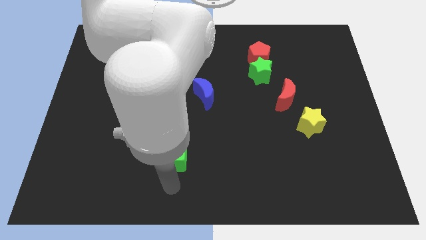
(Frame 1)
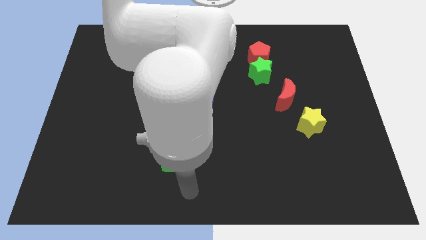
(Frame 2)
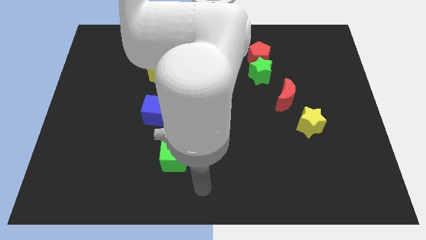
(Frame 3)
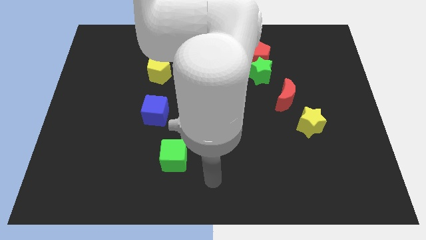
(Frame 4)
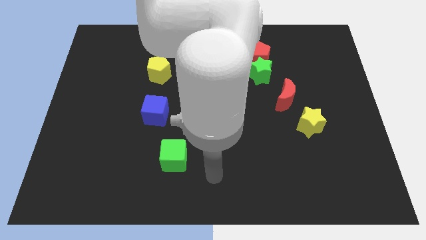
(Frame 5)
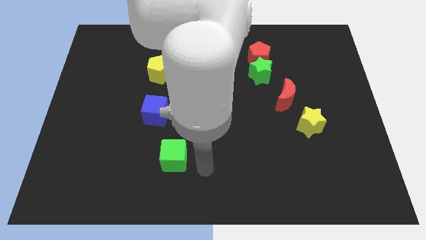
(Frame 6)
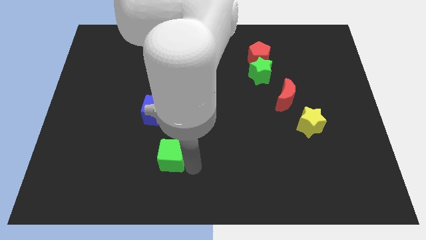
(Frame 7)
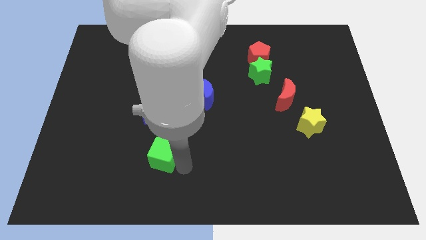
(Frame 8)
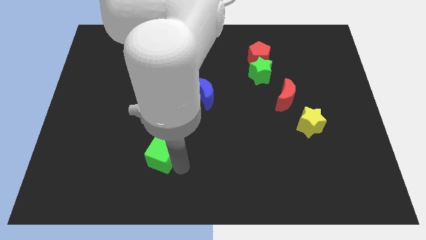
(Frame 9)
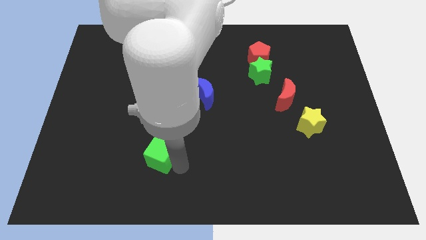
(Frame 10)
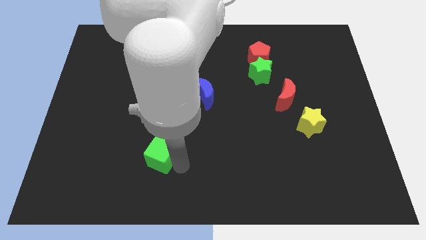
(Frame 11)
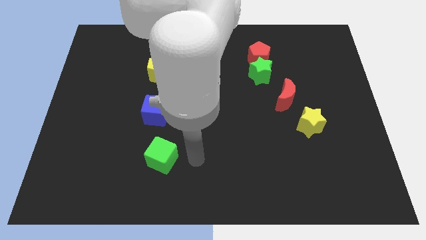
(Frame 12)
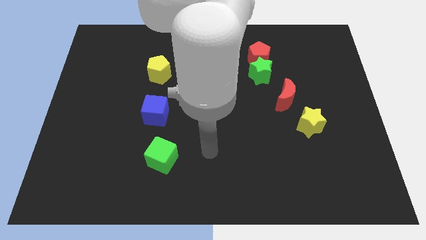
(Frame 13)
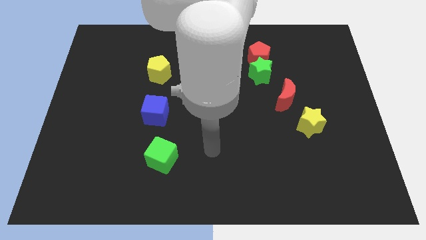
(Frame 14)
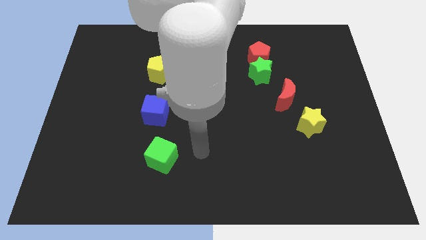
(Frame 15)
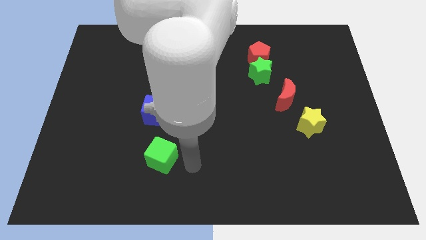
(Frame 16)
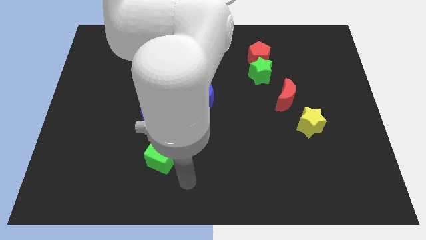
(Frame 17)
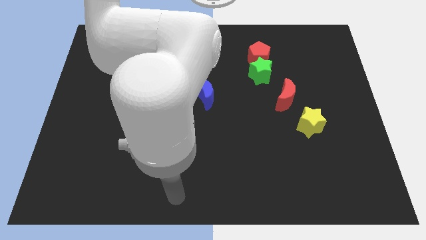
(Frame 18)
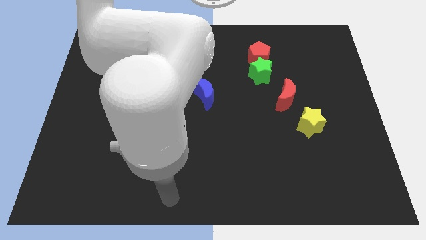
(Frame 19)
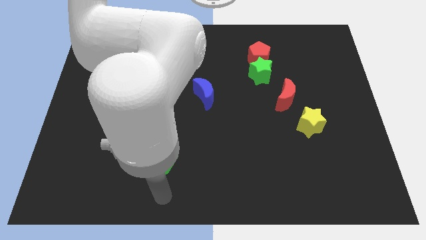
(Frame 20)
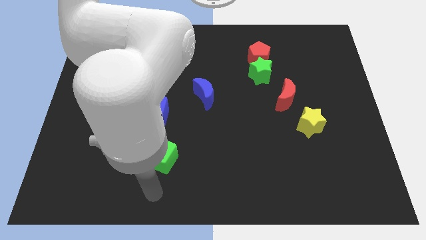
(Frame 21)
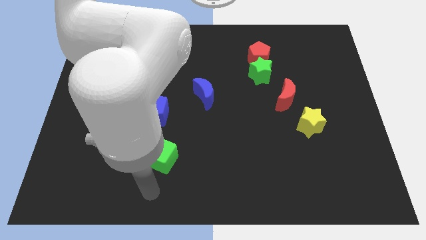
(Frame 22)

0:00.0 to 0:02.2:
slightly push the green cube to the left bottom of the board

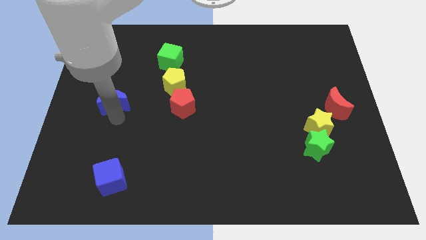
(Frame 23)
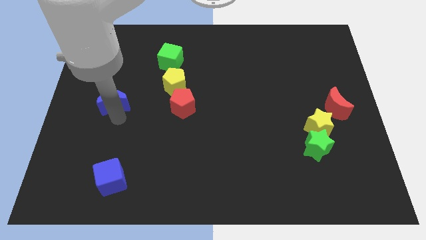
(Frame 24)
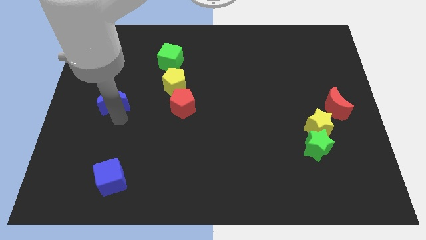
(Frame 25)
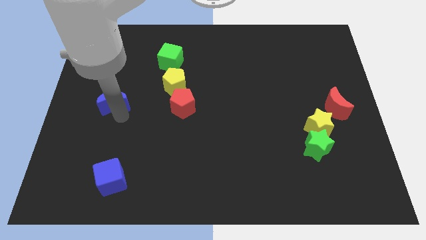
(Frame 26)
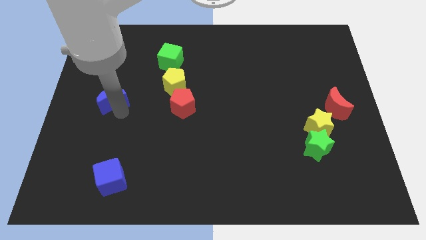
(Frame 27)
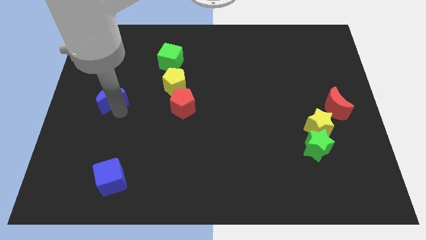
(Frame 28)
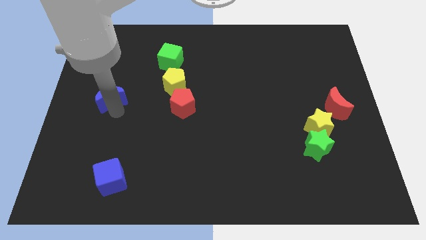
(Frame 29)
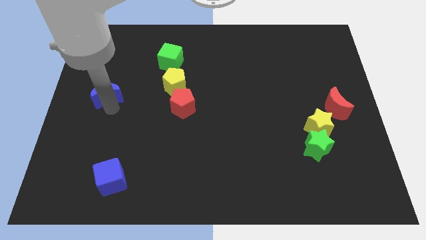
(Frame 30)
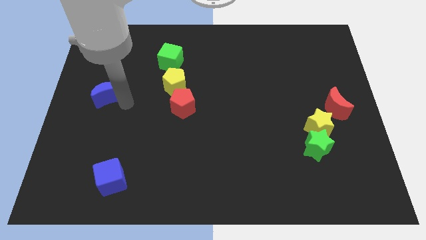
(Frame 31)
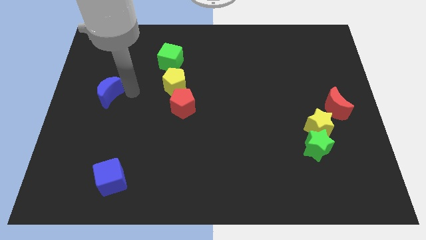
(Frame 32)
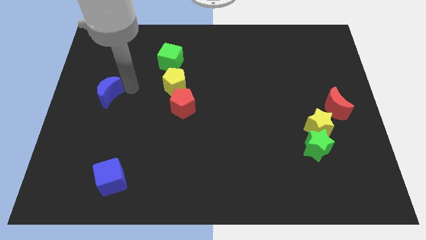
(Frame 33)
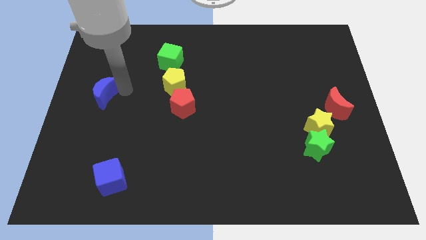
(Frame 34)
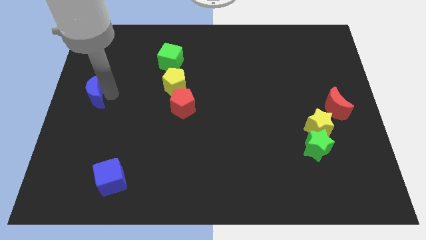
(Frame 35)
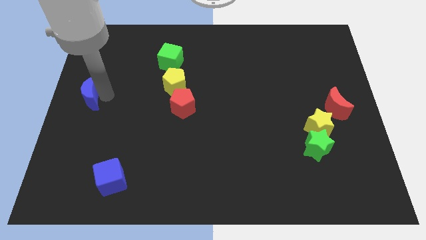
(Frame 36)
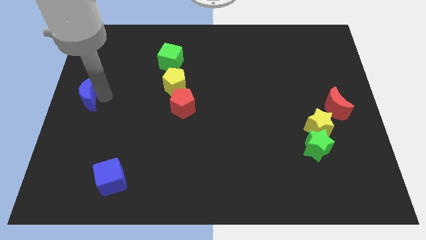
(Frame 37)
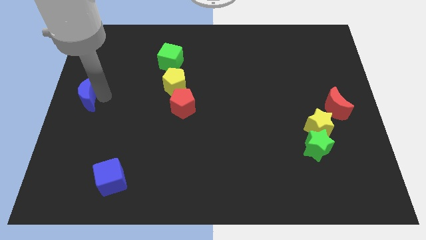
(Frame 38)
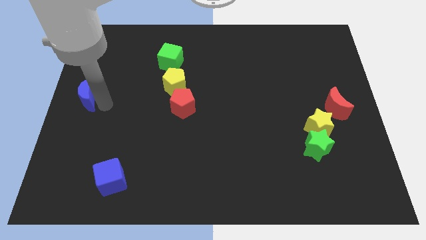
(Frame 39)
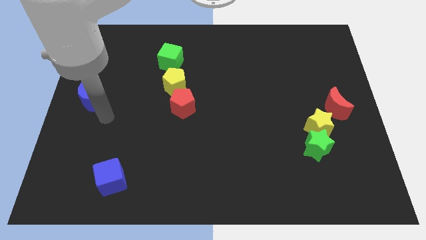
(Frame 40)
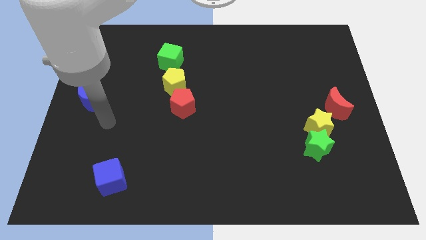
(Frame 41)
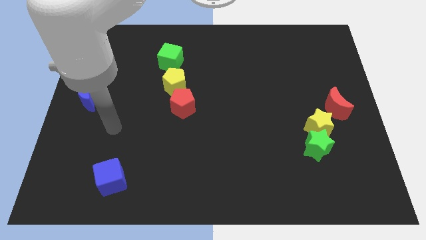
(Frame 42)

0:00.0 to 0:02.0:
move the blue moon towards the center left of the board

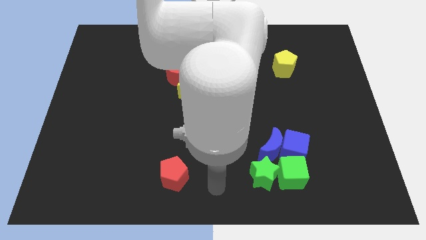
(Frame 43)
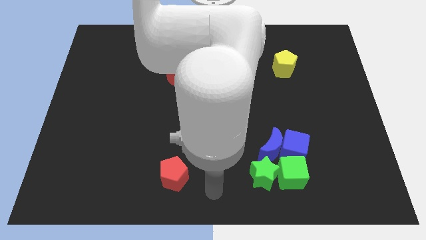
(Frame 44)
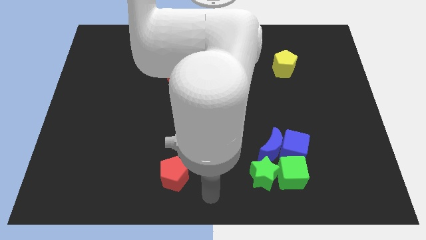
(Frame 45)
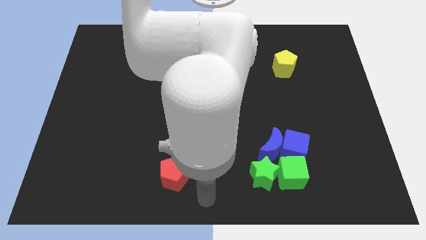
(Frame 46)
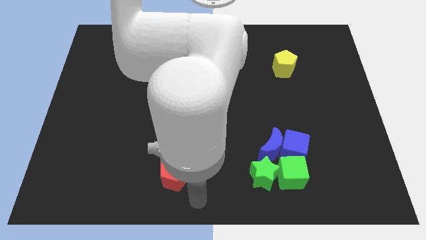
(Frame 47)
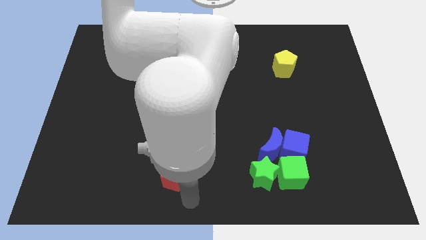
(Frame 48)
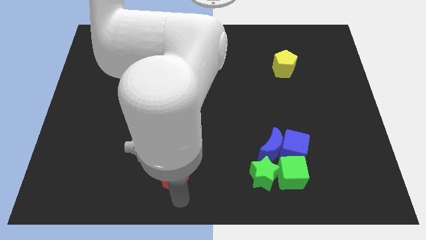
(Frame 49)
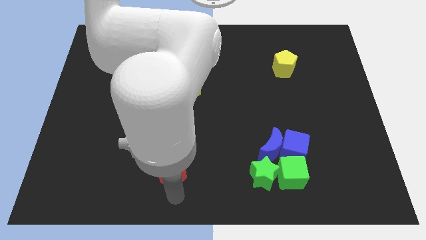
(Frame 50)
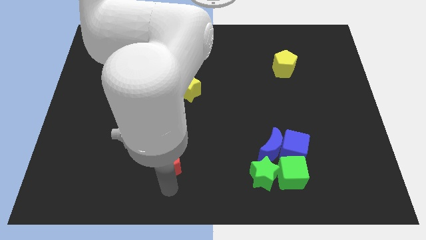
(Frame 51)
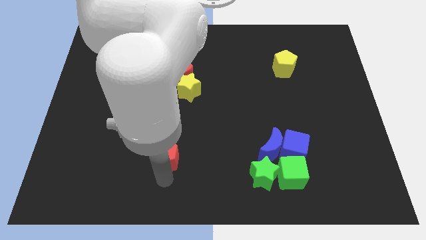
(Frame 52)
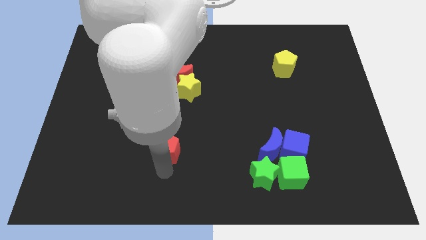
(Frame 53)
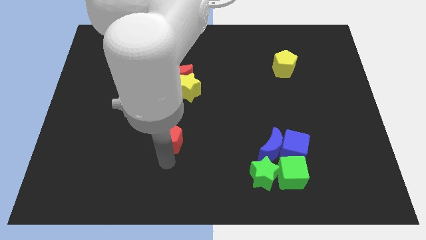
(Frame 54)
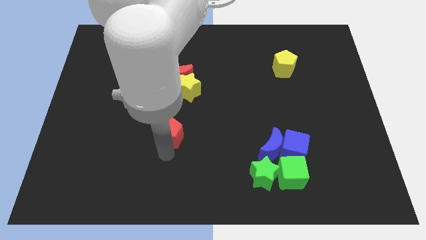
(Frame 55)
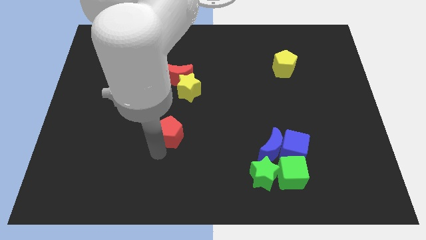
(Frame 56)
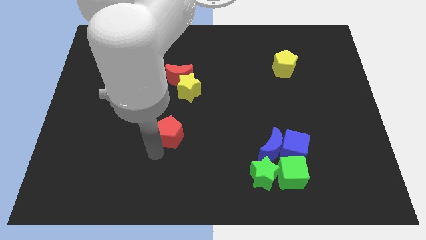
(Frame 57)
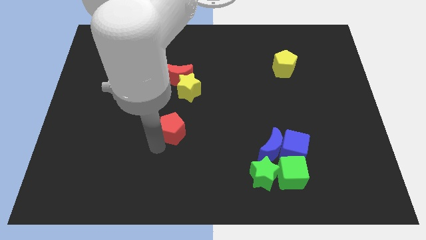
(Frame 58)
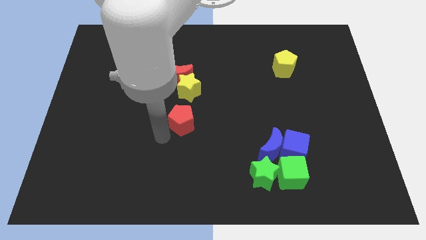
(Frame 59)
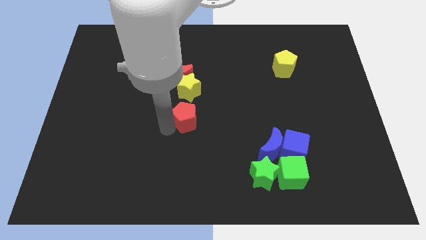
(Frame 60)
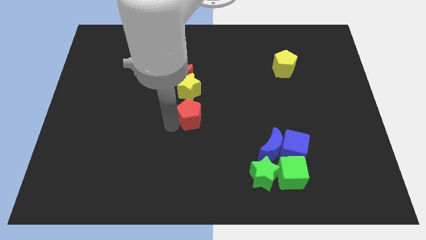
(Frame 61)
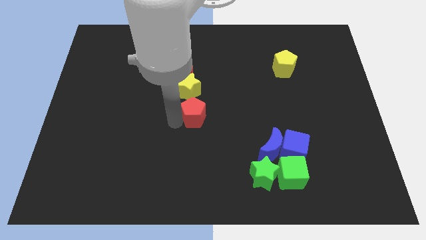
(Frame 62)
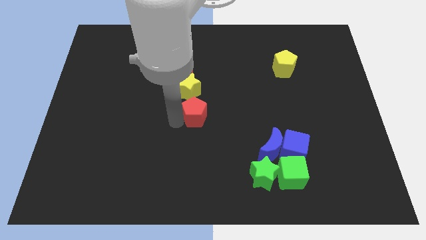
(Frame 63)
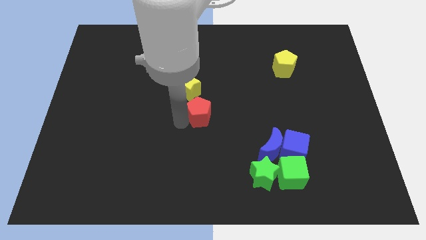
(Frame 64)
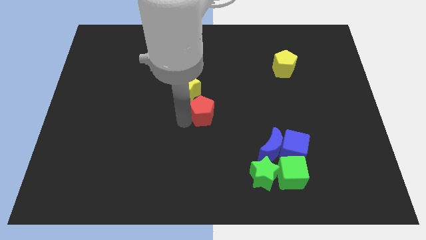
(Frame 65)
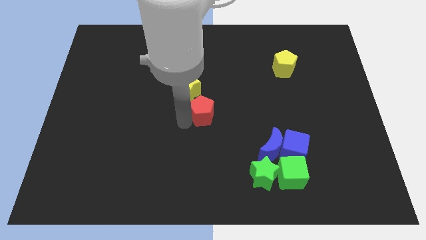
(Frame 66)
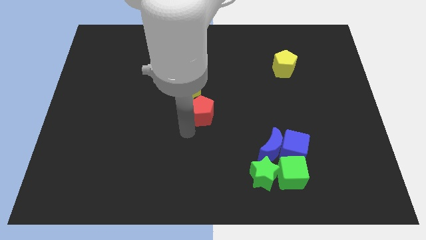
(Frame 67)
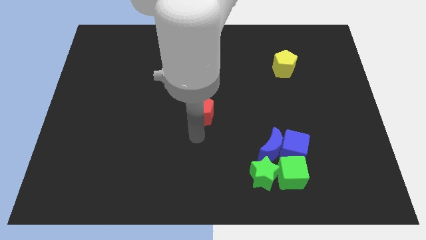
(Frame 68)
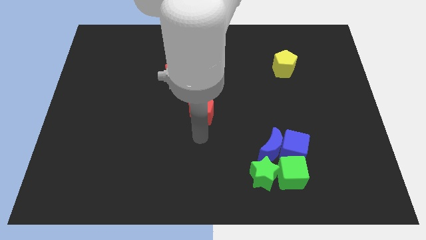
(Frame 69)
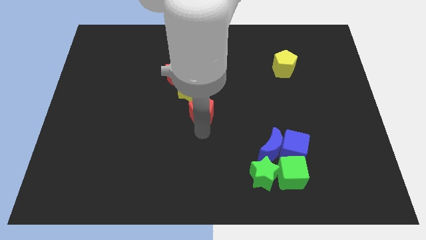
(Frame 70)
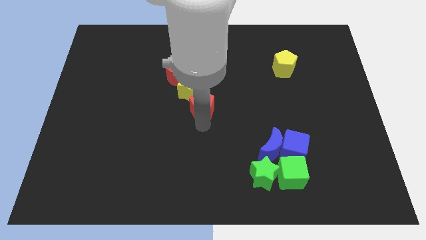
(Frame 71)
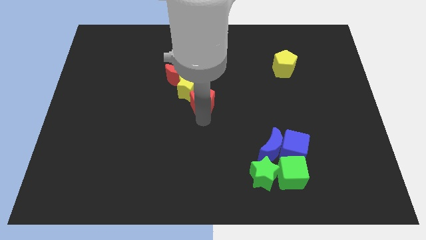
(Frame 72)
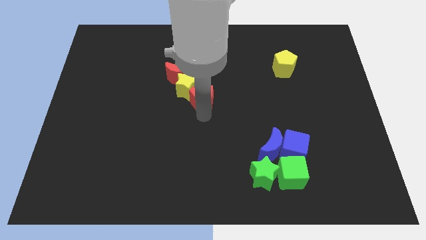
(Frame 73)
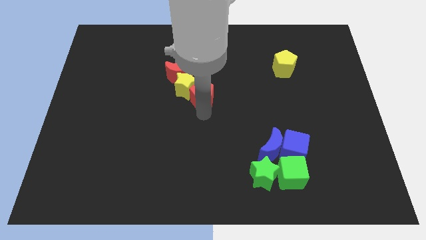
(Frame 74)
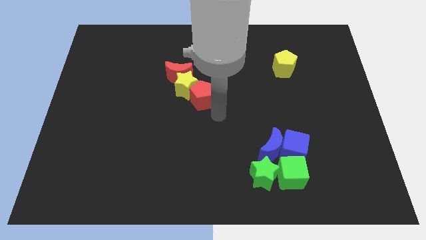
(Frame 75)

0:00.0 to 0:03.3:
move the red pentagon towards the center of the board

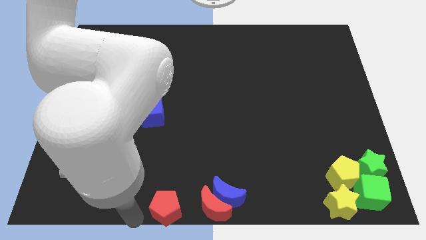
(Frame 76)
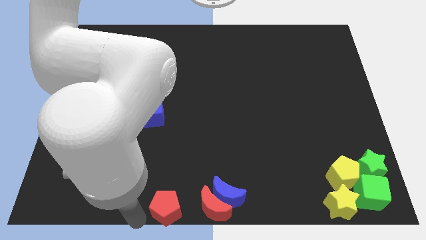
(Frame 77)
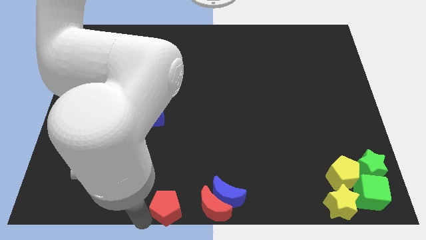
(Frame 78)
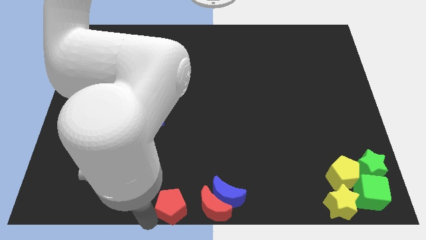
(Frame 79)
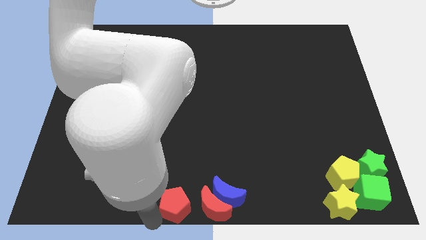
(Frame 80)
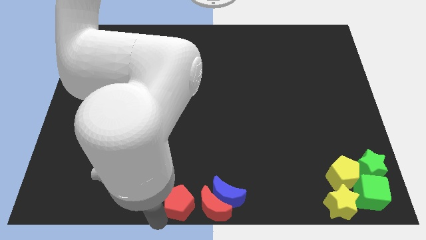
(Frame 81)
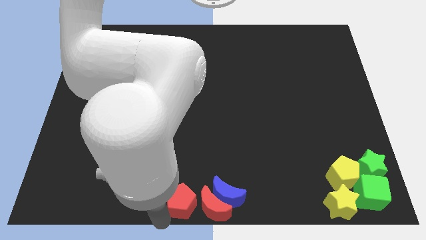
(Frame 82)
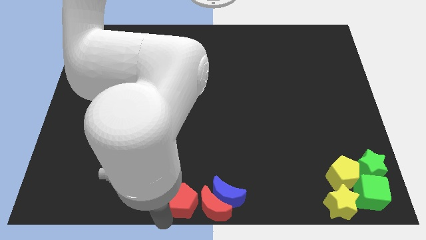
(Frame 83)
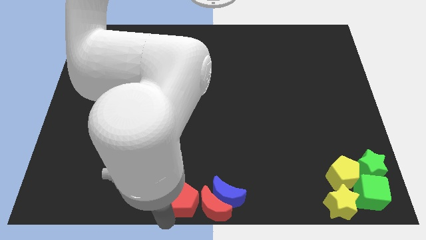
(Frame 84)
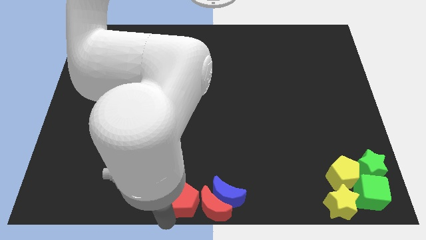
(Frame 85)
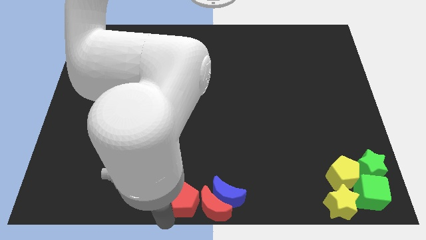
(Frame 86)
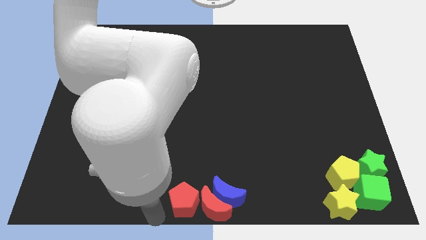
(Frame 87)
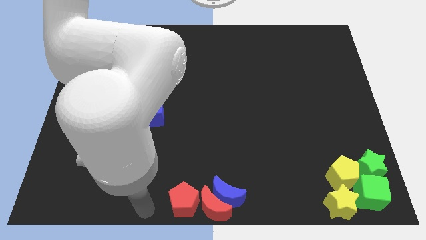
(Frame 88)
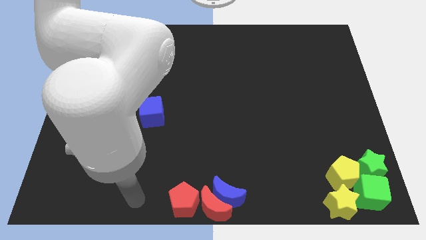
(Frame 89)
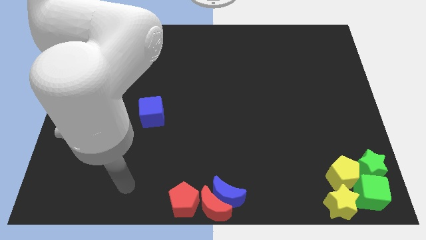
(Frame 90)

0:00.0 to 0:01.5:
put the red pentagon on the left side of the red crescent

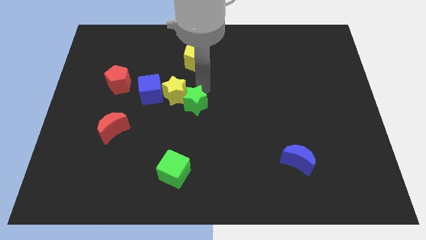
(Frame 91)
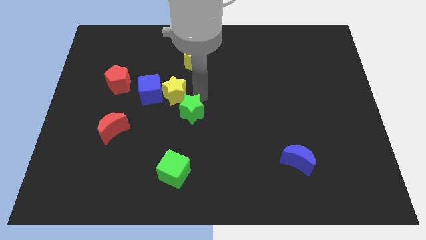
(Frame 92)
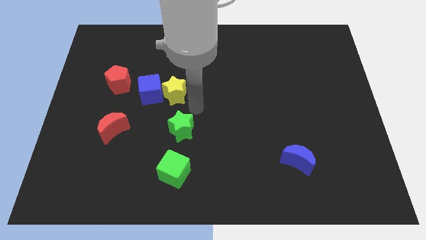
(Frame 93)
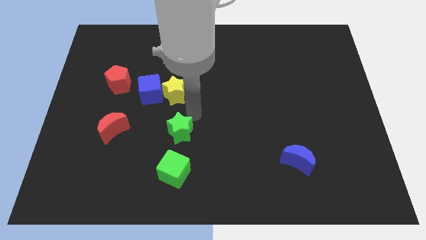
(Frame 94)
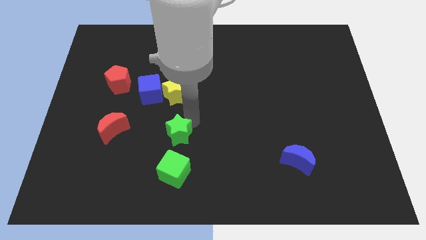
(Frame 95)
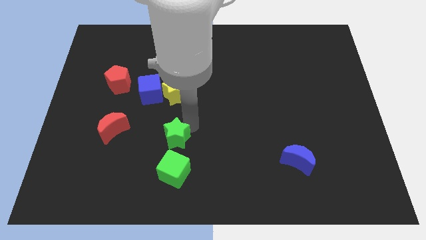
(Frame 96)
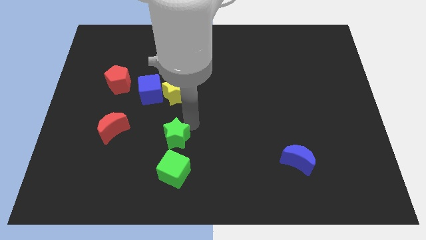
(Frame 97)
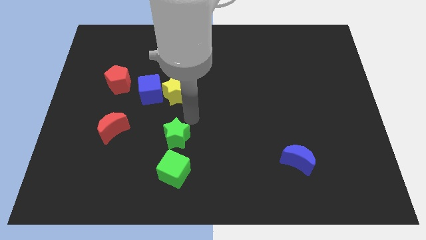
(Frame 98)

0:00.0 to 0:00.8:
separate green star from yellow star
